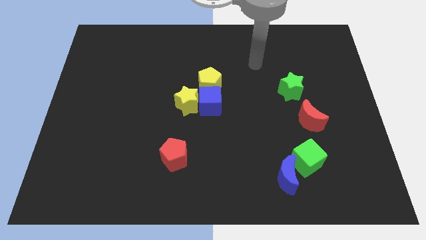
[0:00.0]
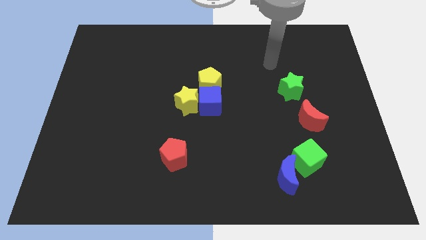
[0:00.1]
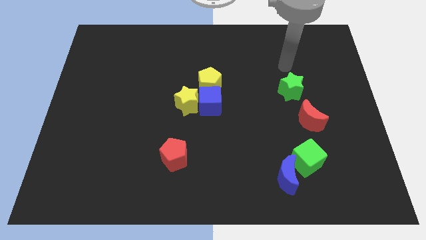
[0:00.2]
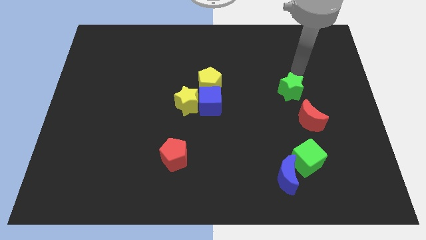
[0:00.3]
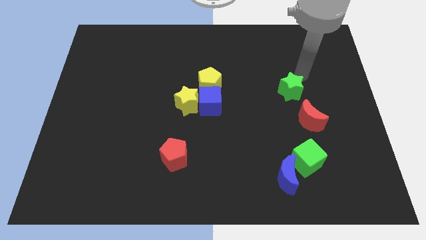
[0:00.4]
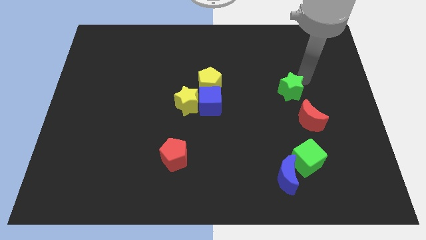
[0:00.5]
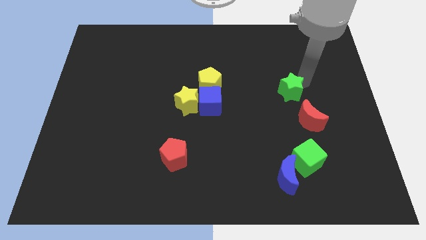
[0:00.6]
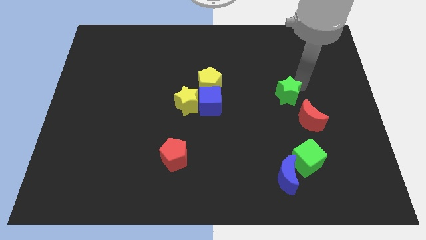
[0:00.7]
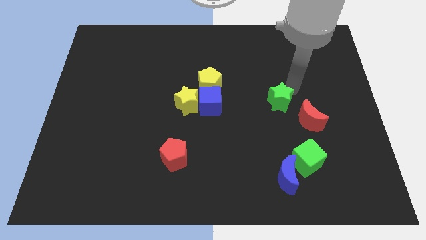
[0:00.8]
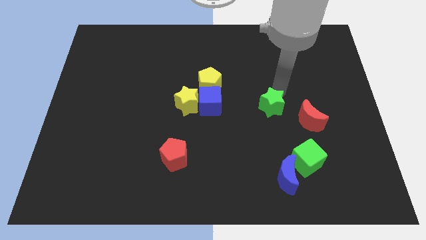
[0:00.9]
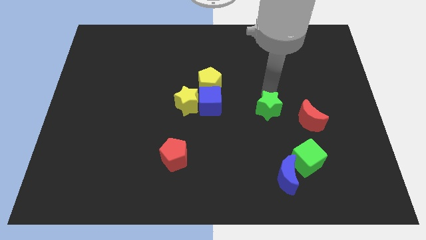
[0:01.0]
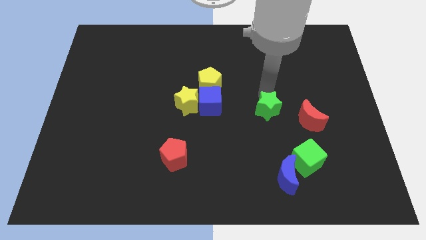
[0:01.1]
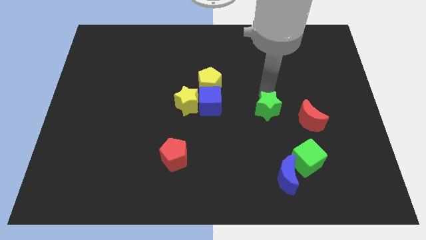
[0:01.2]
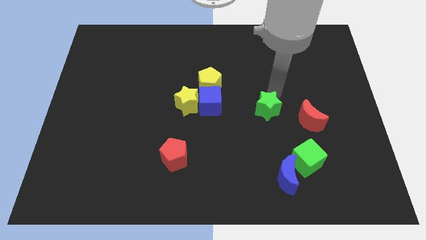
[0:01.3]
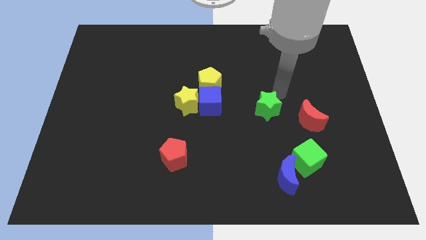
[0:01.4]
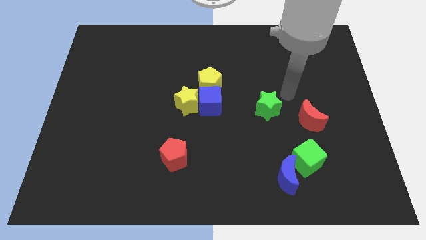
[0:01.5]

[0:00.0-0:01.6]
move the green star slightly to the center of the board

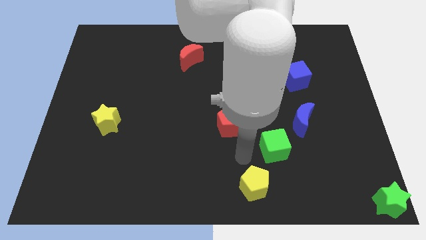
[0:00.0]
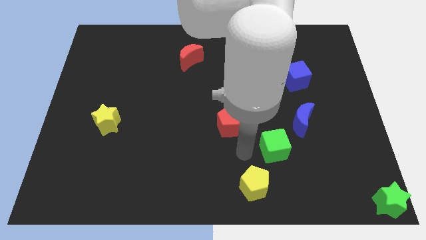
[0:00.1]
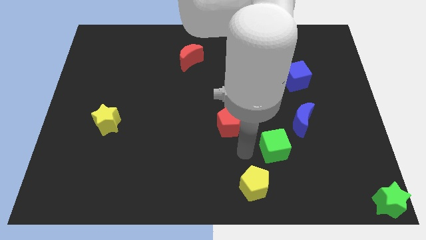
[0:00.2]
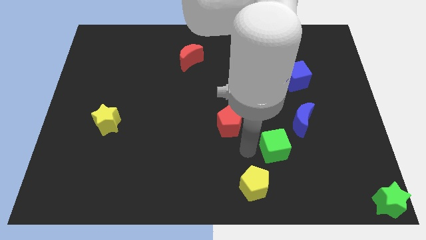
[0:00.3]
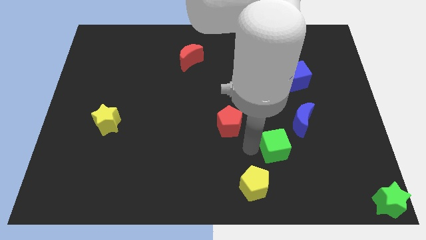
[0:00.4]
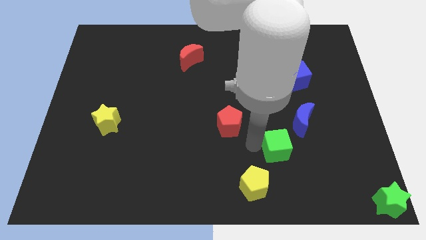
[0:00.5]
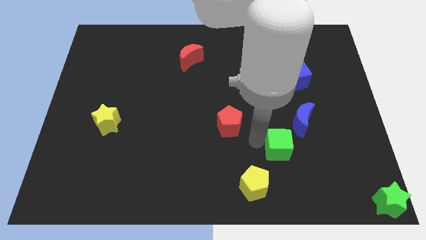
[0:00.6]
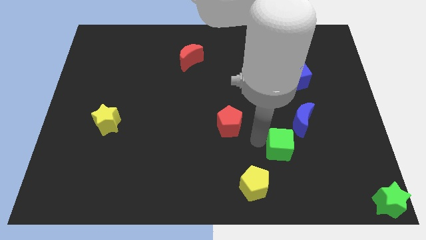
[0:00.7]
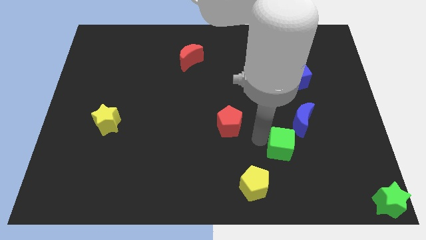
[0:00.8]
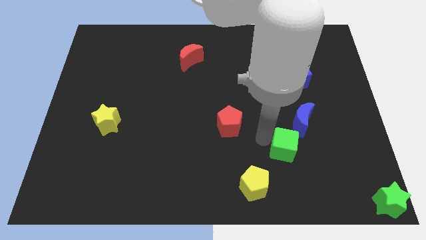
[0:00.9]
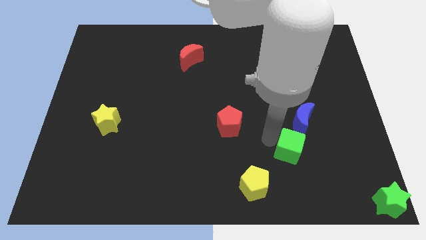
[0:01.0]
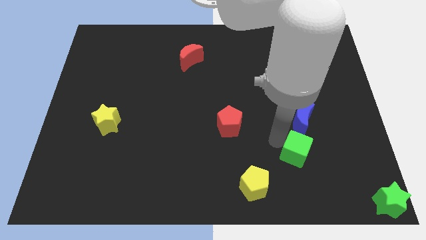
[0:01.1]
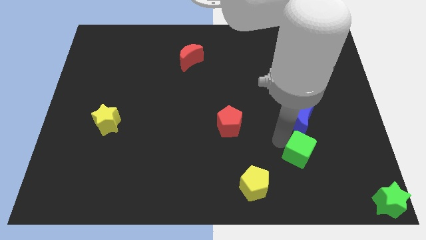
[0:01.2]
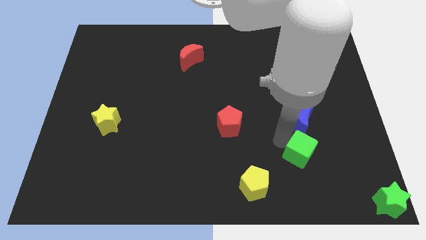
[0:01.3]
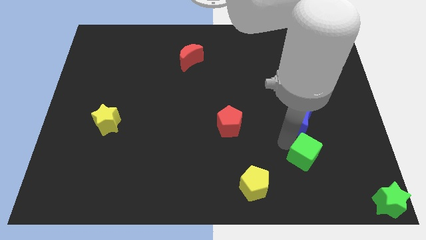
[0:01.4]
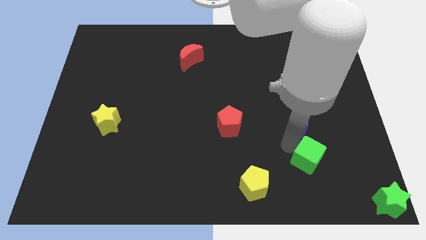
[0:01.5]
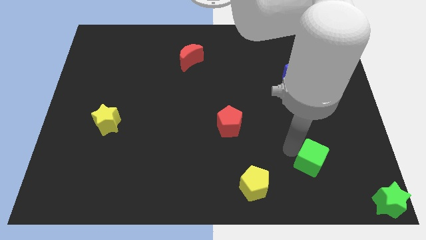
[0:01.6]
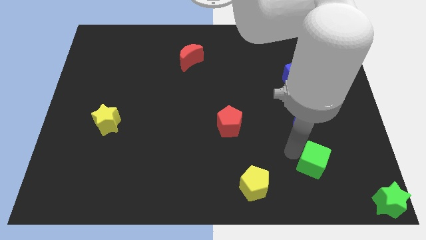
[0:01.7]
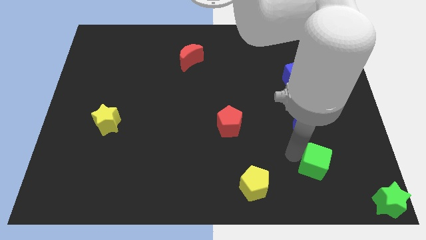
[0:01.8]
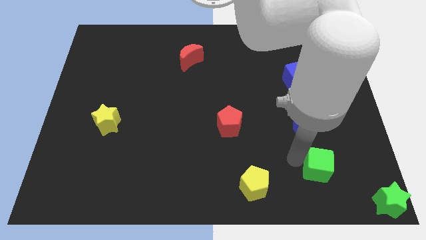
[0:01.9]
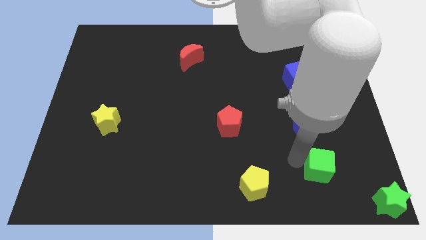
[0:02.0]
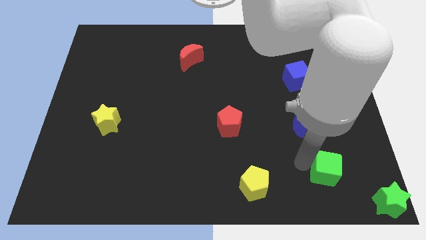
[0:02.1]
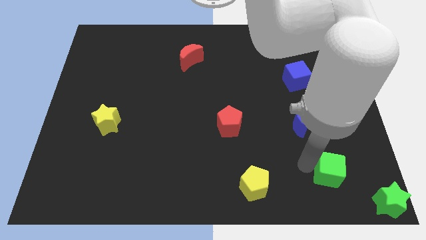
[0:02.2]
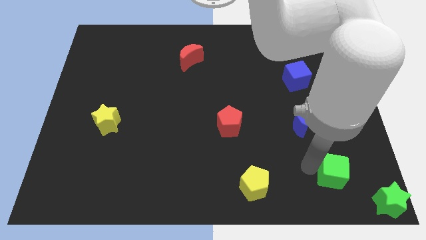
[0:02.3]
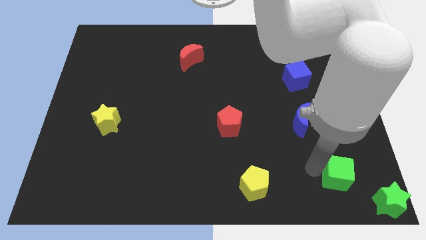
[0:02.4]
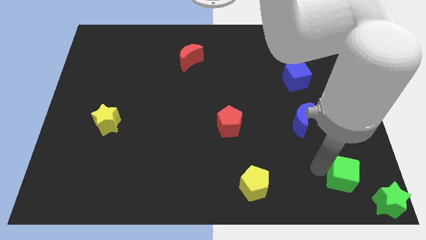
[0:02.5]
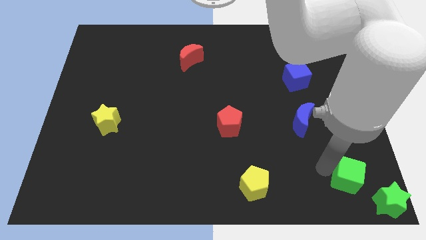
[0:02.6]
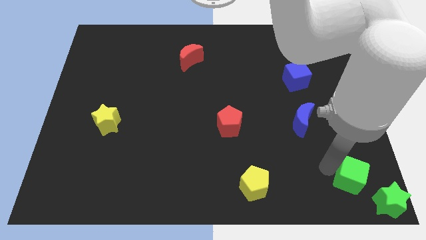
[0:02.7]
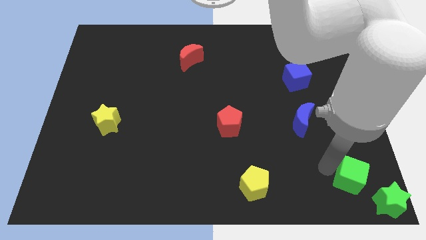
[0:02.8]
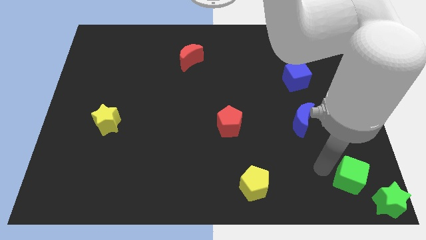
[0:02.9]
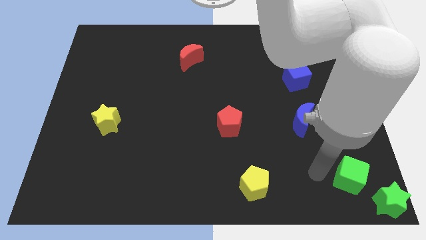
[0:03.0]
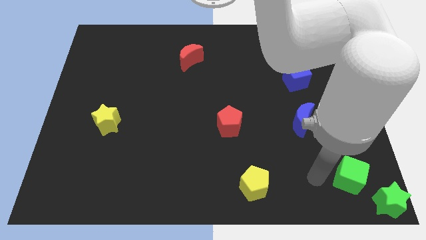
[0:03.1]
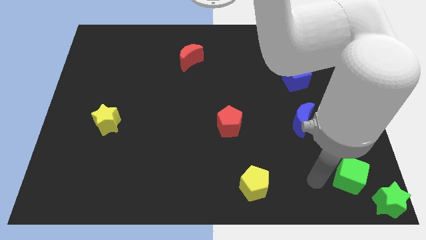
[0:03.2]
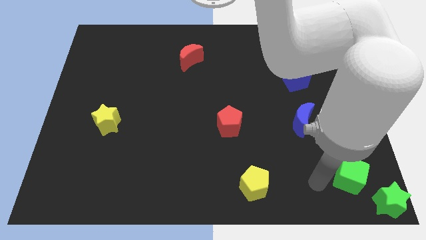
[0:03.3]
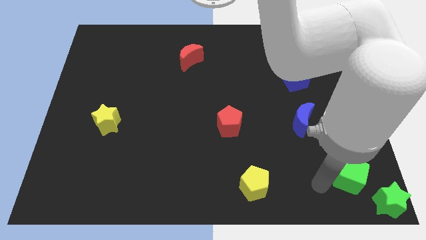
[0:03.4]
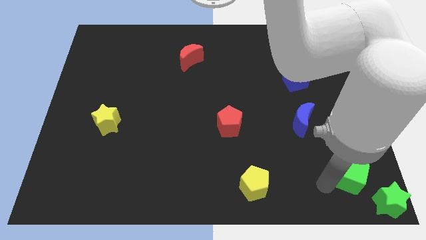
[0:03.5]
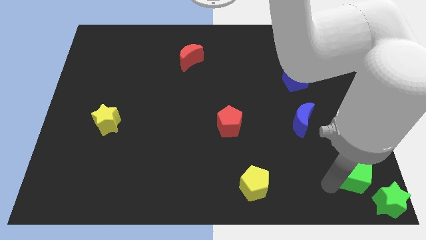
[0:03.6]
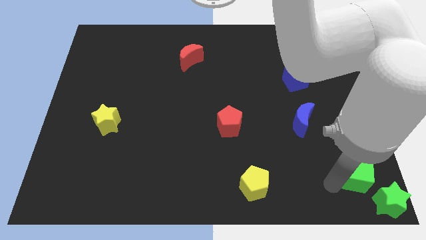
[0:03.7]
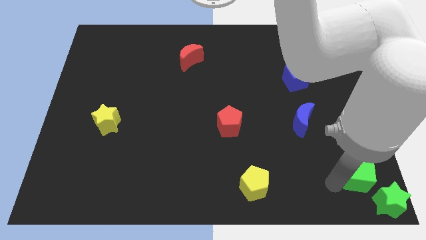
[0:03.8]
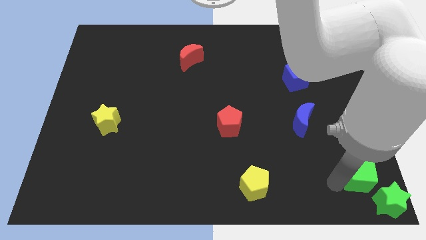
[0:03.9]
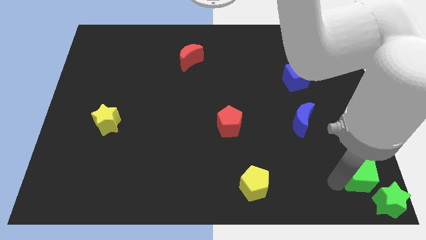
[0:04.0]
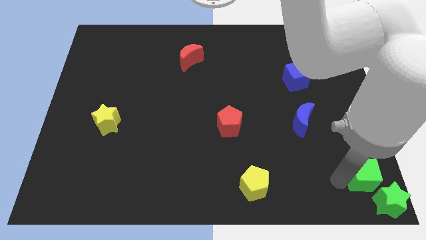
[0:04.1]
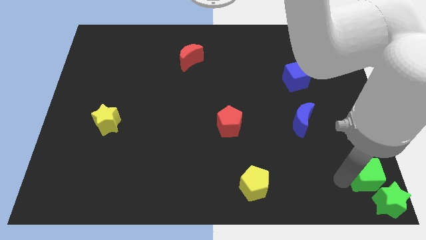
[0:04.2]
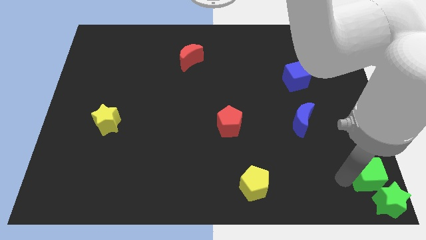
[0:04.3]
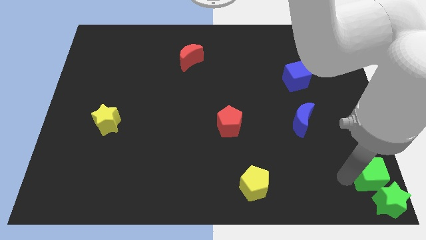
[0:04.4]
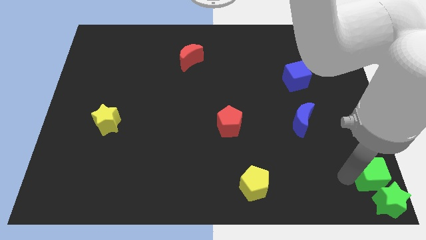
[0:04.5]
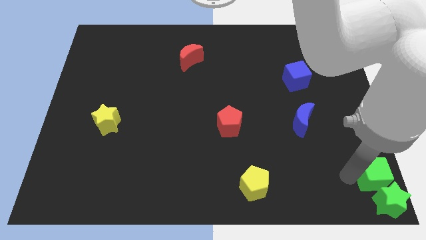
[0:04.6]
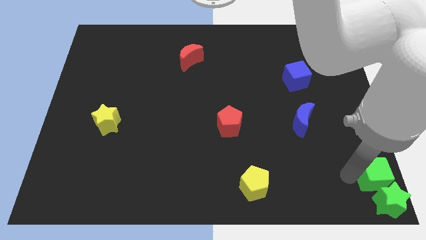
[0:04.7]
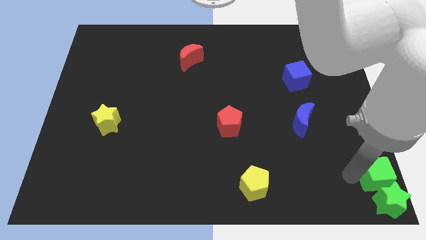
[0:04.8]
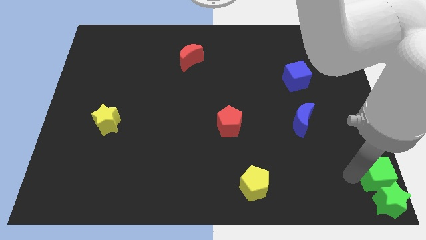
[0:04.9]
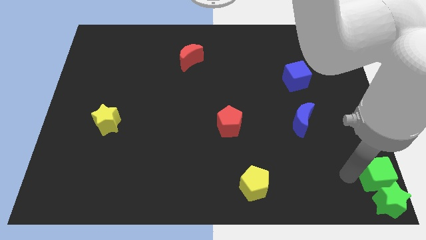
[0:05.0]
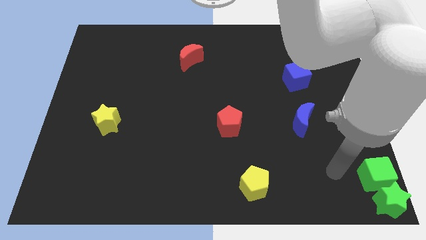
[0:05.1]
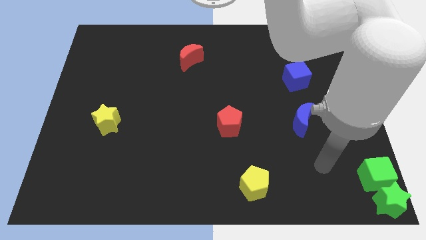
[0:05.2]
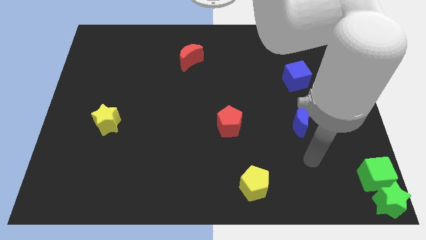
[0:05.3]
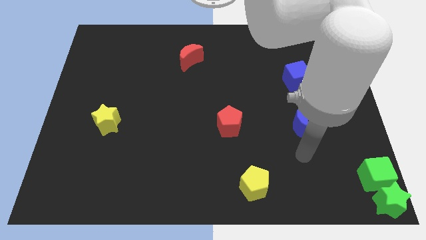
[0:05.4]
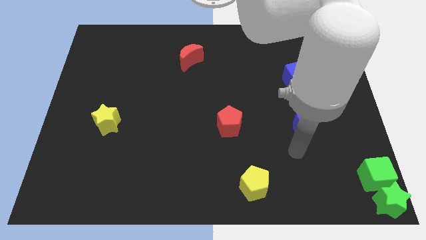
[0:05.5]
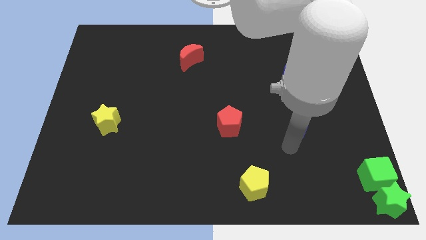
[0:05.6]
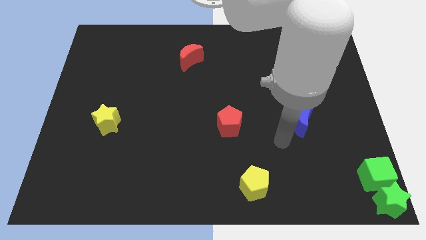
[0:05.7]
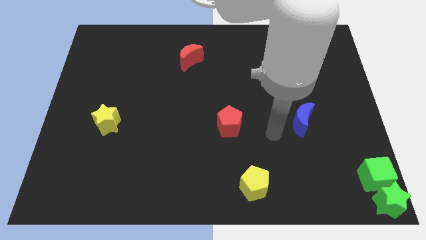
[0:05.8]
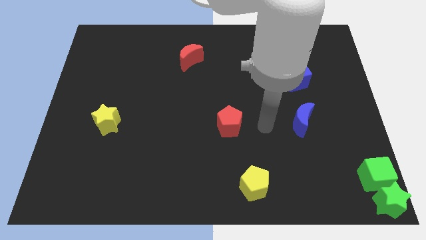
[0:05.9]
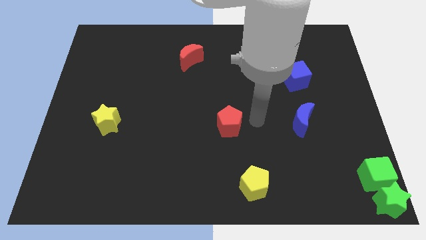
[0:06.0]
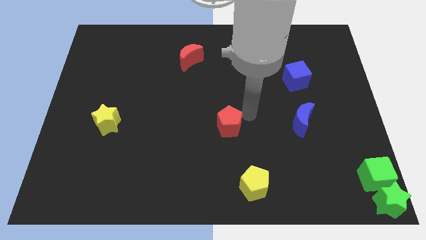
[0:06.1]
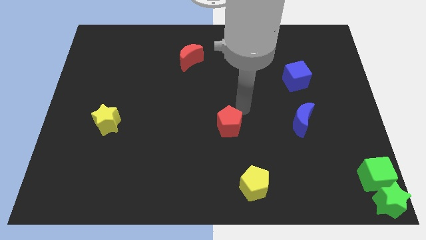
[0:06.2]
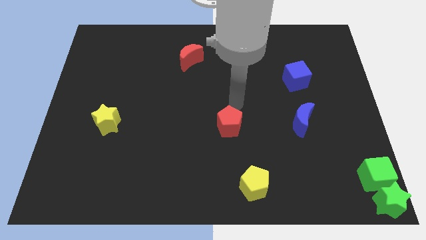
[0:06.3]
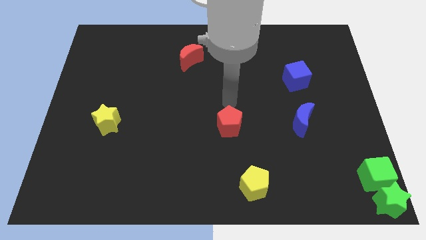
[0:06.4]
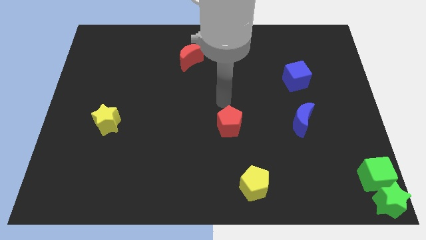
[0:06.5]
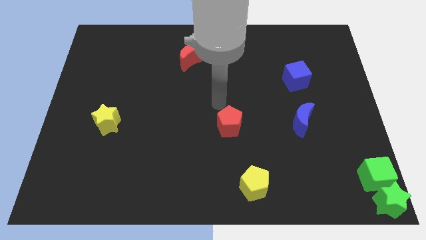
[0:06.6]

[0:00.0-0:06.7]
push the green cube towards the top of the green star

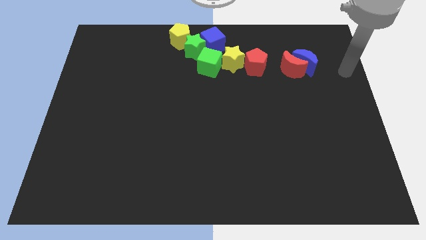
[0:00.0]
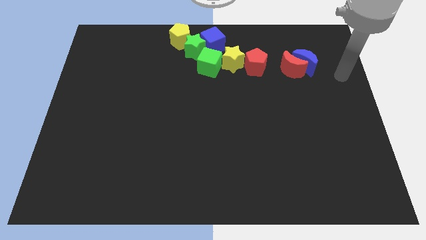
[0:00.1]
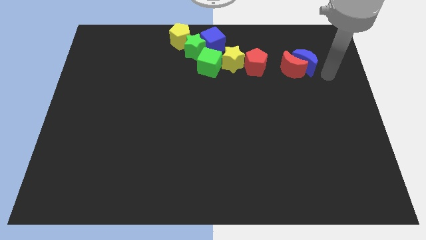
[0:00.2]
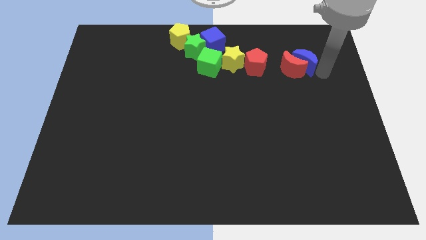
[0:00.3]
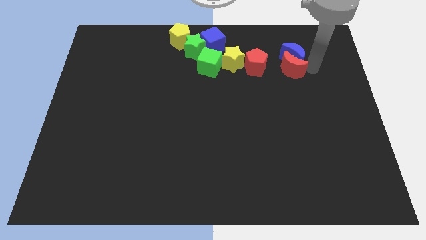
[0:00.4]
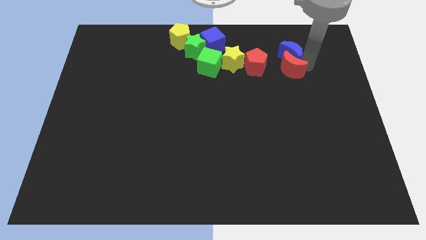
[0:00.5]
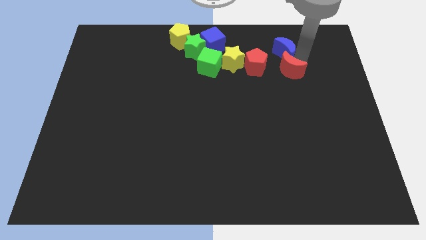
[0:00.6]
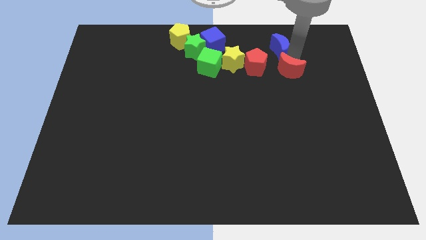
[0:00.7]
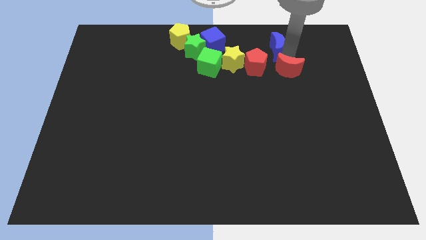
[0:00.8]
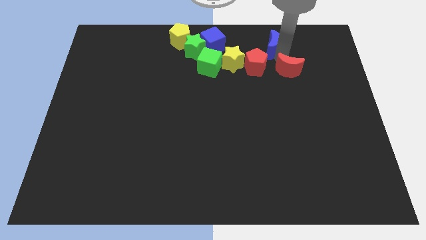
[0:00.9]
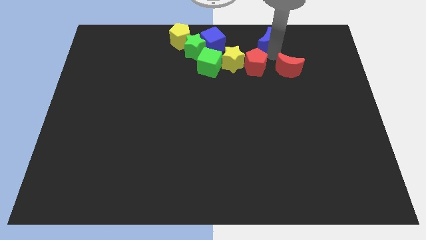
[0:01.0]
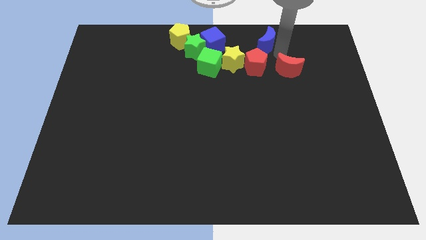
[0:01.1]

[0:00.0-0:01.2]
push the blue crescent above the red pentagon
